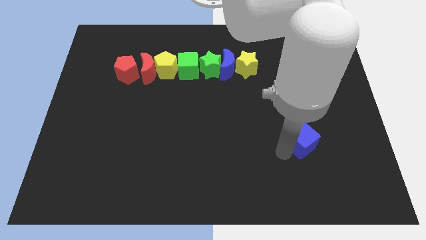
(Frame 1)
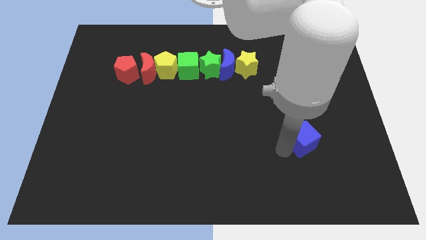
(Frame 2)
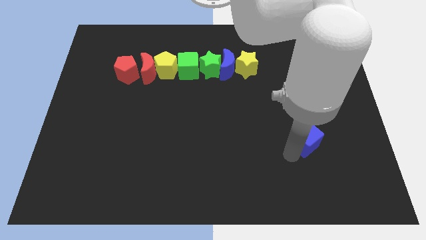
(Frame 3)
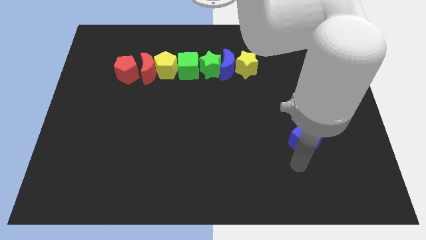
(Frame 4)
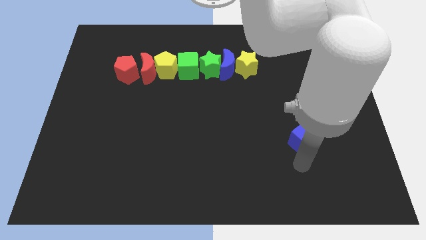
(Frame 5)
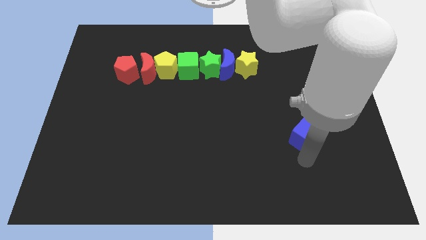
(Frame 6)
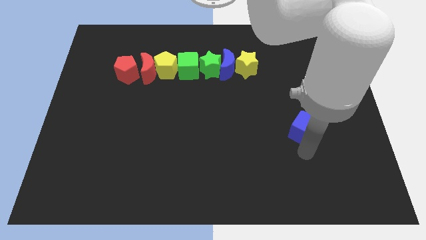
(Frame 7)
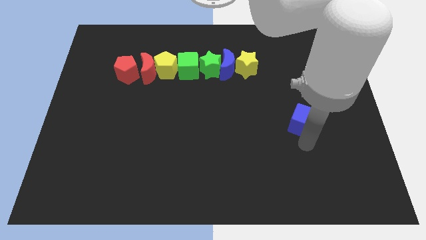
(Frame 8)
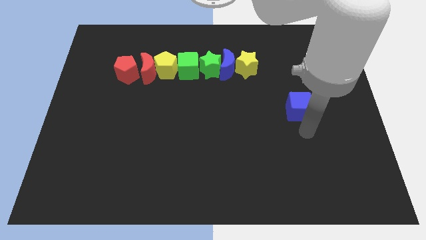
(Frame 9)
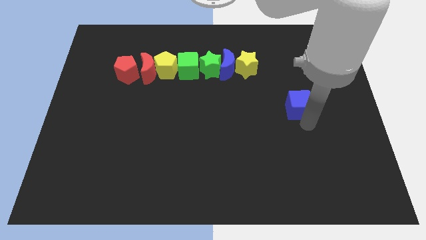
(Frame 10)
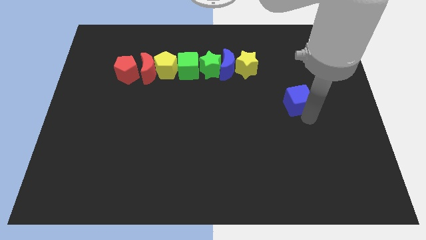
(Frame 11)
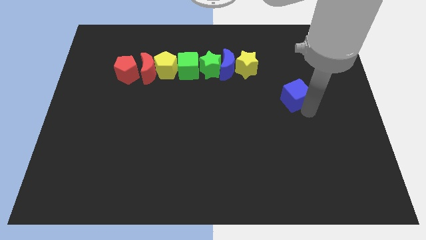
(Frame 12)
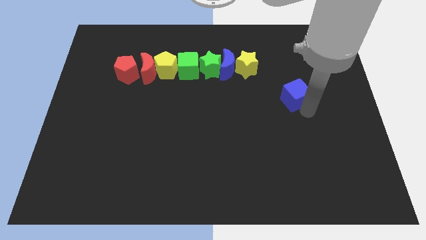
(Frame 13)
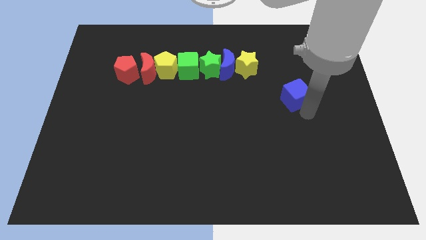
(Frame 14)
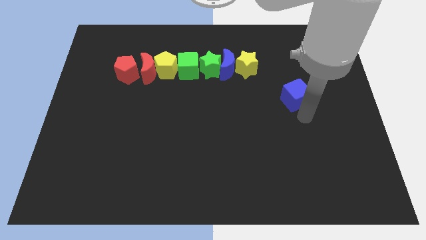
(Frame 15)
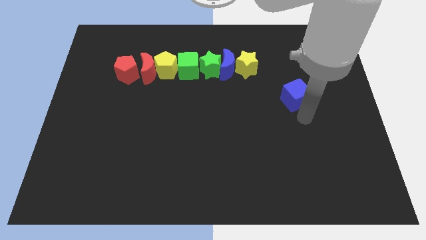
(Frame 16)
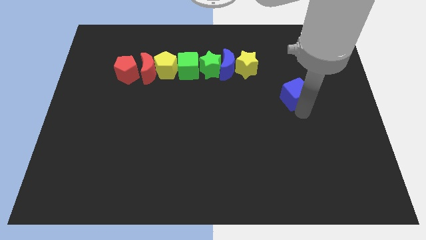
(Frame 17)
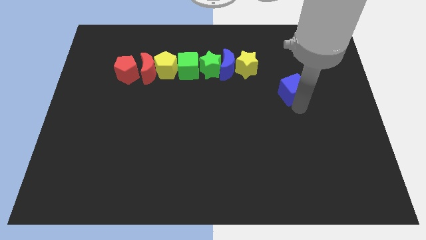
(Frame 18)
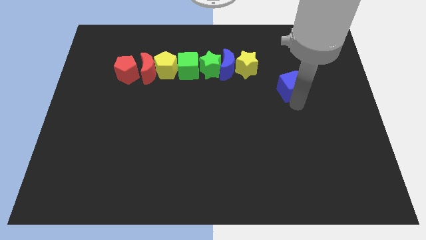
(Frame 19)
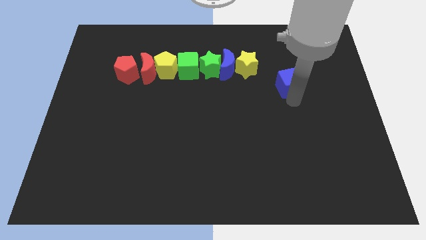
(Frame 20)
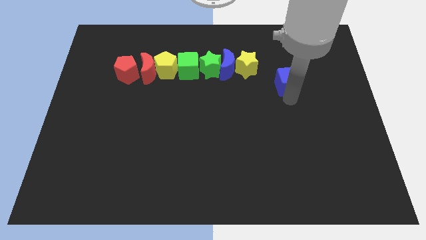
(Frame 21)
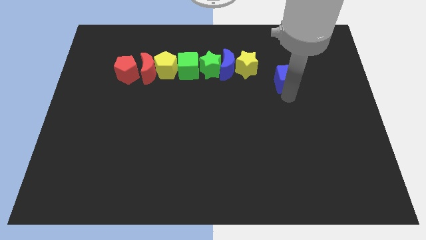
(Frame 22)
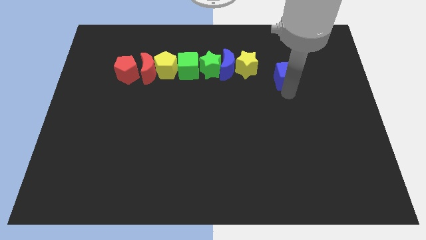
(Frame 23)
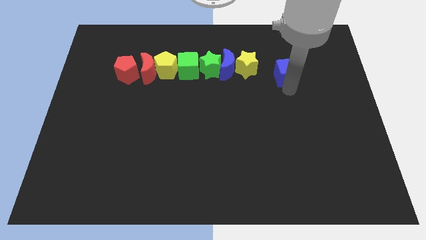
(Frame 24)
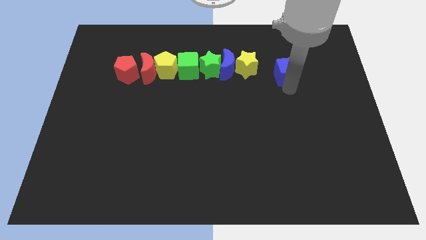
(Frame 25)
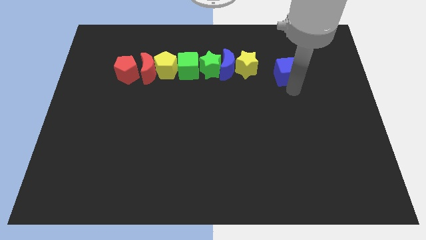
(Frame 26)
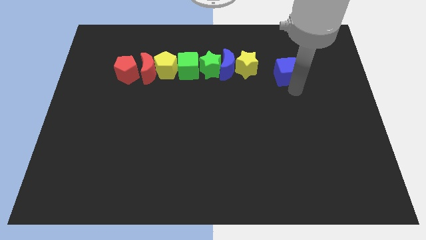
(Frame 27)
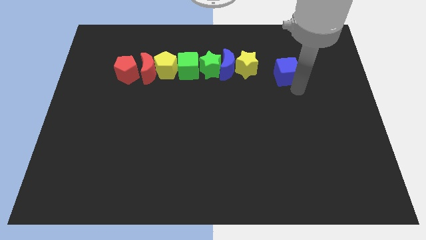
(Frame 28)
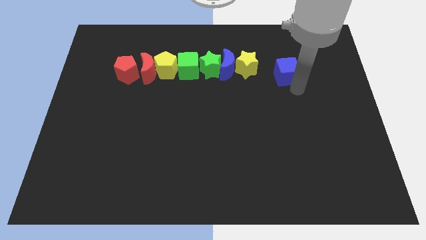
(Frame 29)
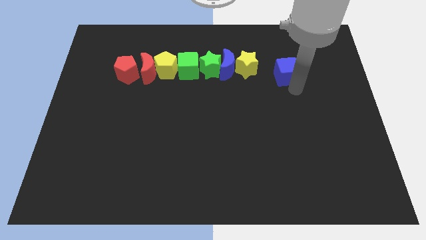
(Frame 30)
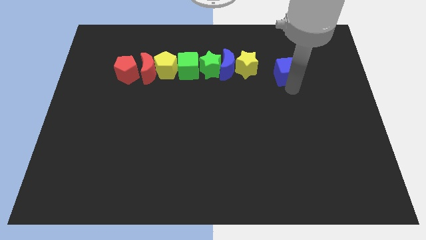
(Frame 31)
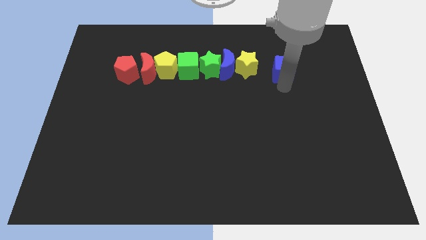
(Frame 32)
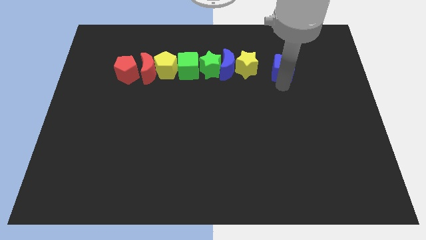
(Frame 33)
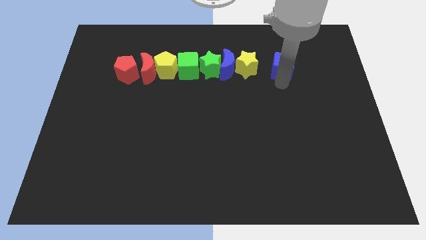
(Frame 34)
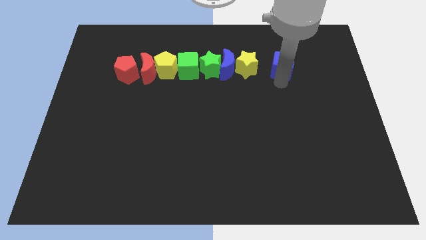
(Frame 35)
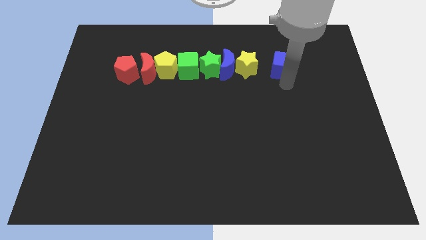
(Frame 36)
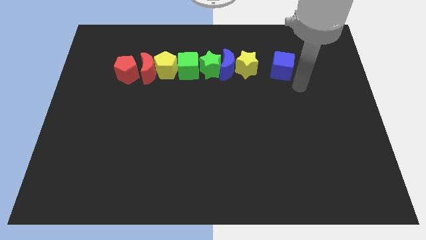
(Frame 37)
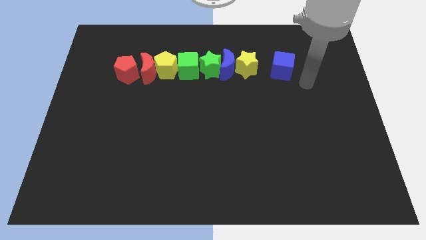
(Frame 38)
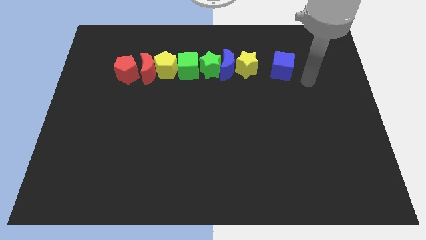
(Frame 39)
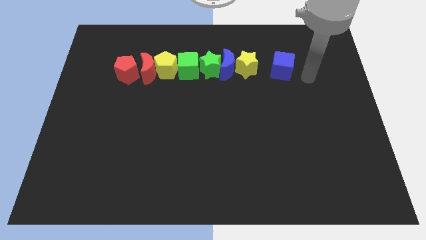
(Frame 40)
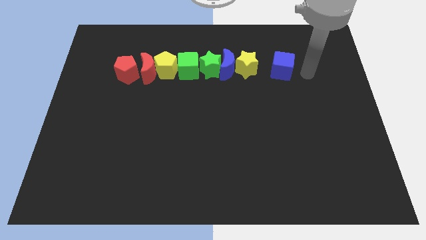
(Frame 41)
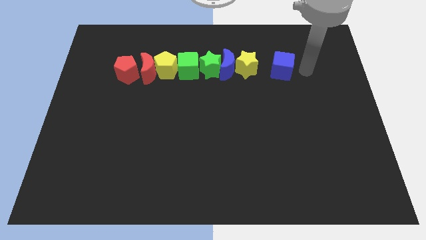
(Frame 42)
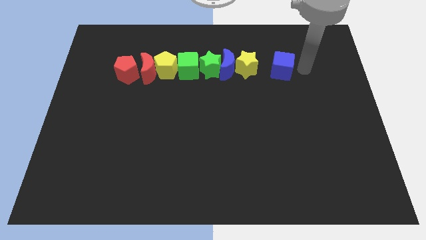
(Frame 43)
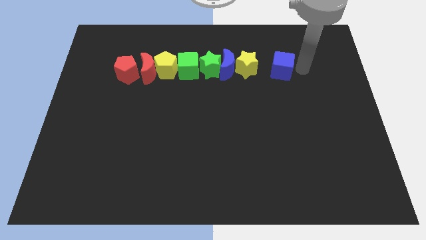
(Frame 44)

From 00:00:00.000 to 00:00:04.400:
push the blue cube to the right side of the yellow star

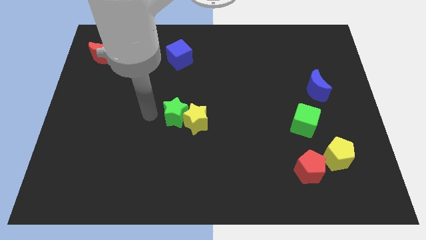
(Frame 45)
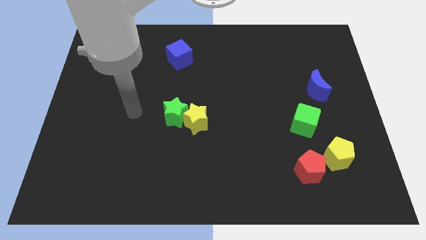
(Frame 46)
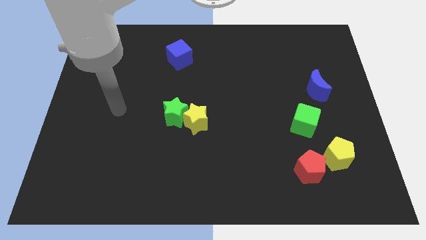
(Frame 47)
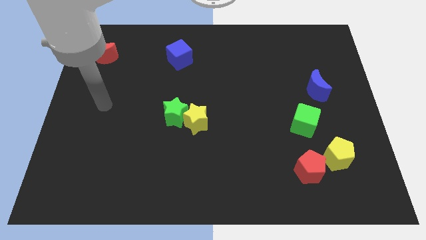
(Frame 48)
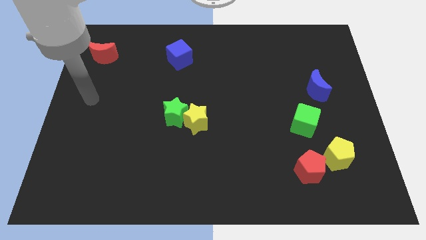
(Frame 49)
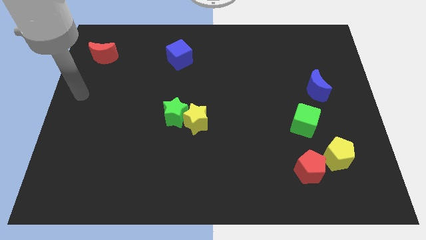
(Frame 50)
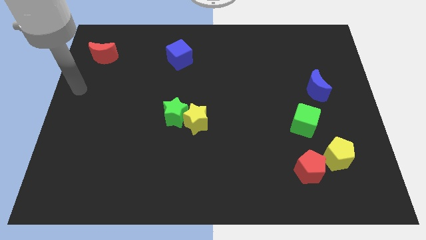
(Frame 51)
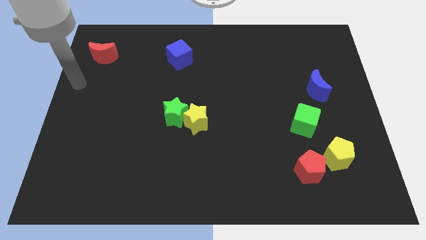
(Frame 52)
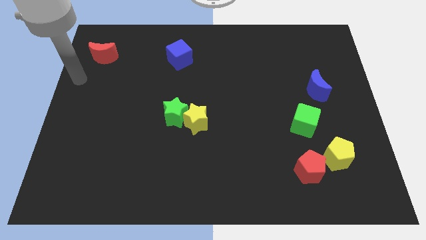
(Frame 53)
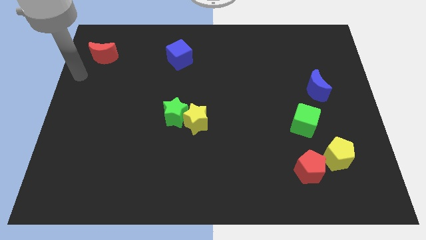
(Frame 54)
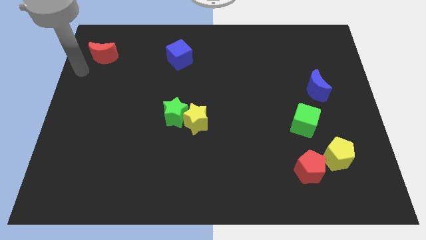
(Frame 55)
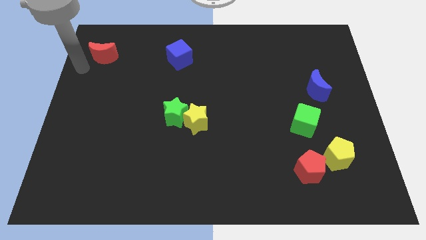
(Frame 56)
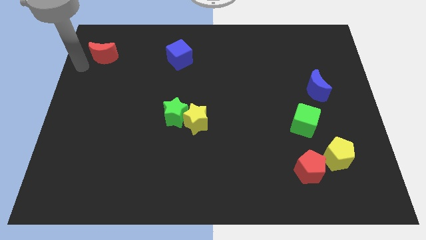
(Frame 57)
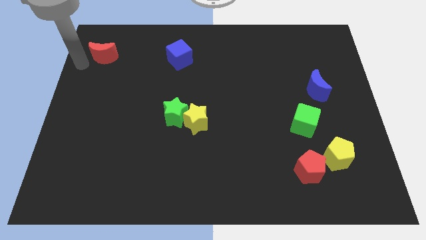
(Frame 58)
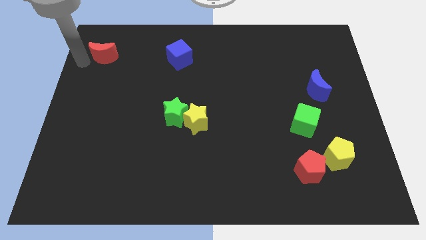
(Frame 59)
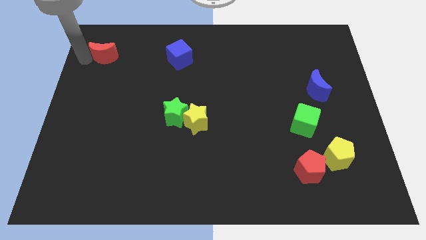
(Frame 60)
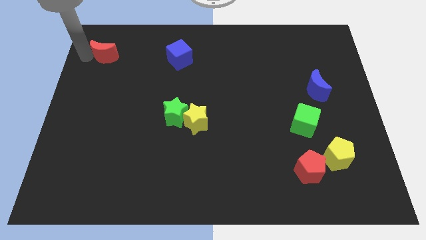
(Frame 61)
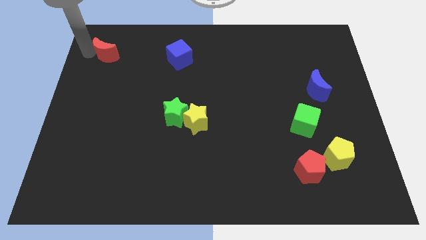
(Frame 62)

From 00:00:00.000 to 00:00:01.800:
tap the left side of the red crescent

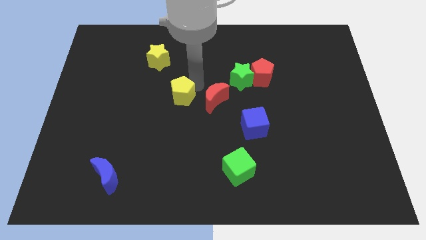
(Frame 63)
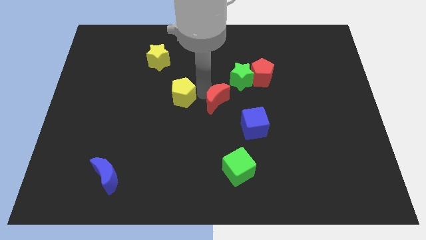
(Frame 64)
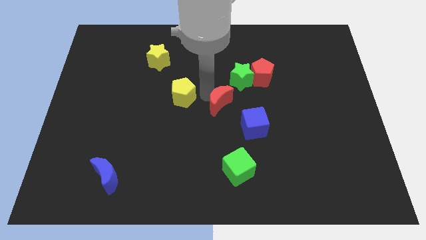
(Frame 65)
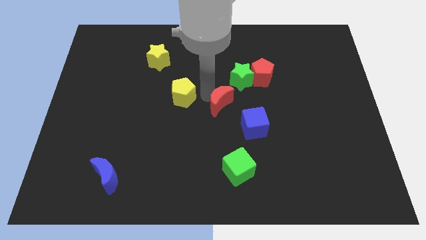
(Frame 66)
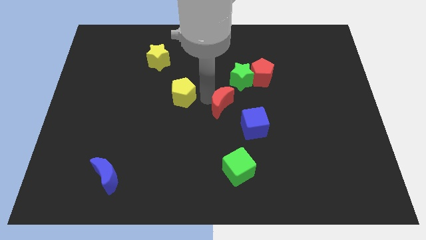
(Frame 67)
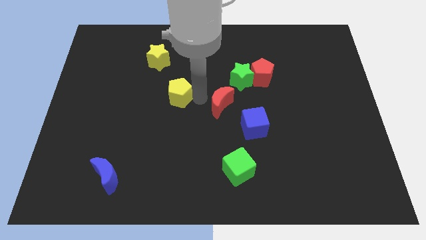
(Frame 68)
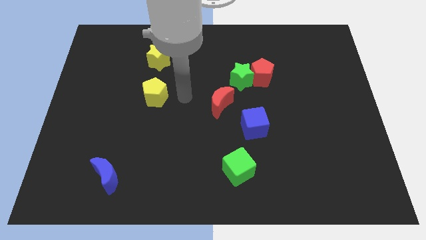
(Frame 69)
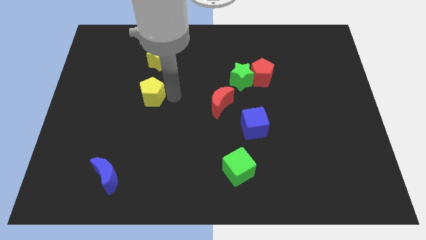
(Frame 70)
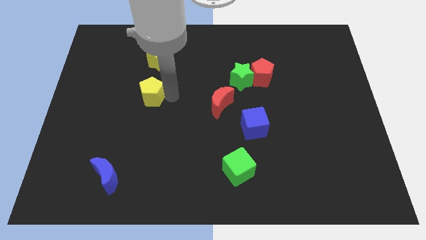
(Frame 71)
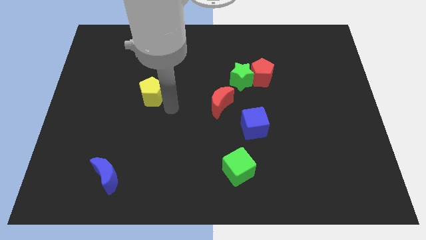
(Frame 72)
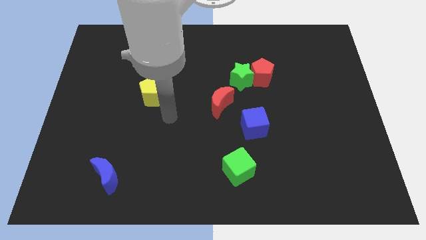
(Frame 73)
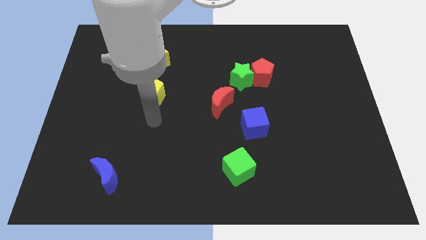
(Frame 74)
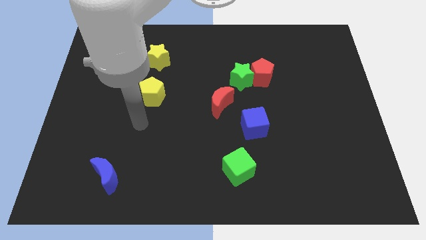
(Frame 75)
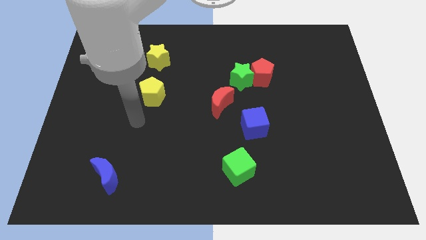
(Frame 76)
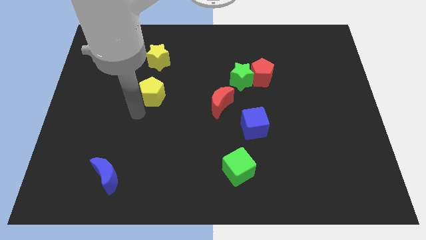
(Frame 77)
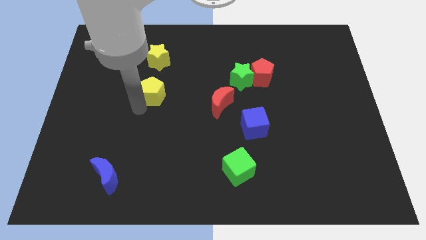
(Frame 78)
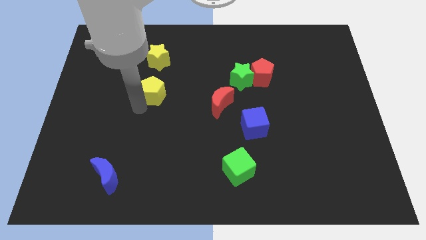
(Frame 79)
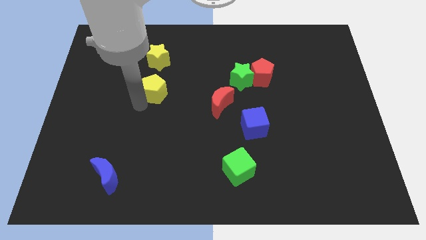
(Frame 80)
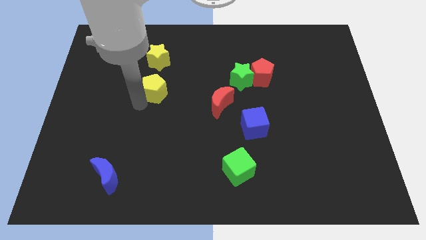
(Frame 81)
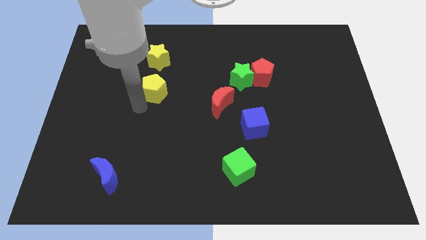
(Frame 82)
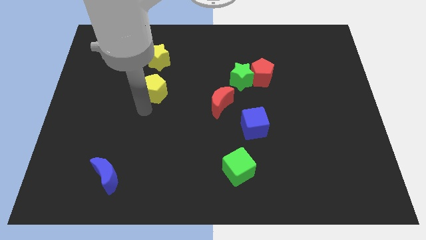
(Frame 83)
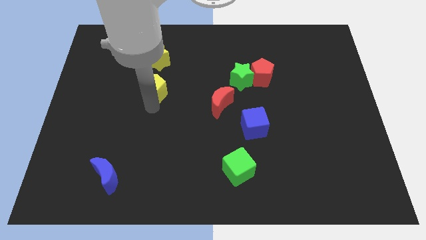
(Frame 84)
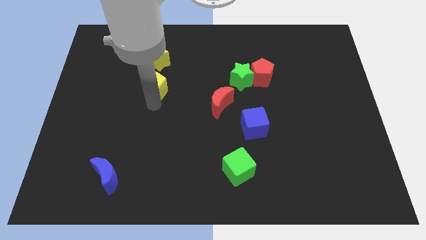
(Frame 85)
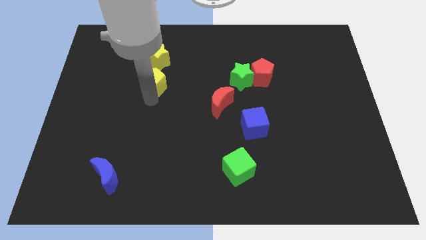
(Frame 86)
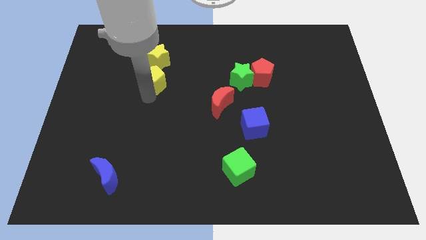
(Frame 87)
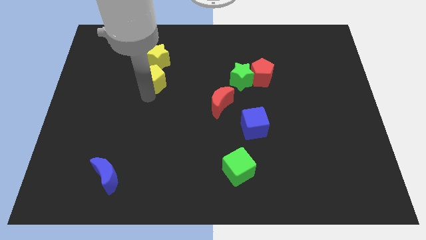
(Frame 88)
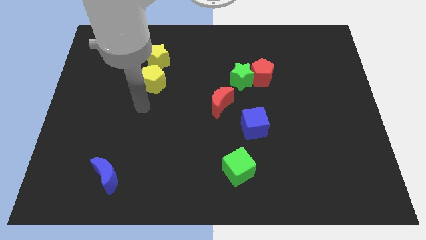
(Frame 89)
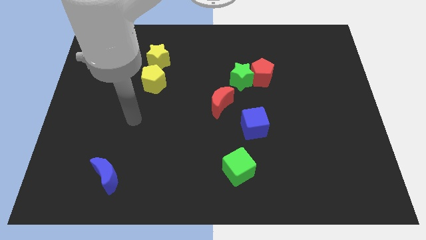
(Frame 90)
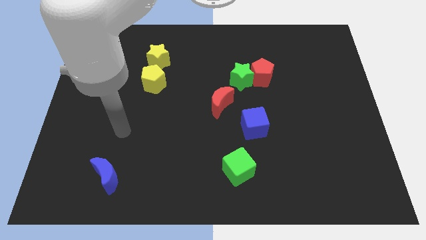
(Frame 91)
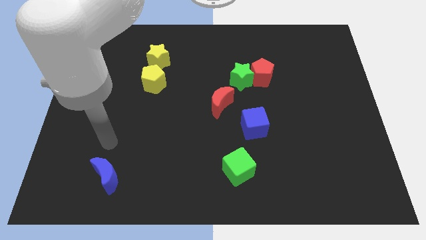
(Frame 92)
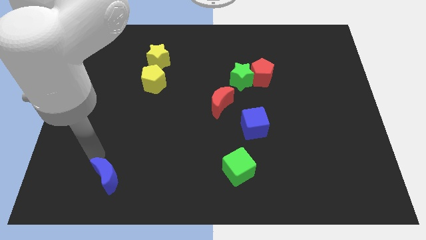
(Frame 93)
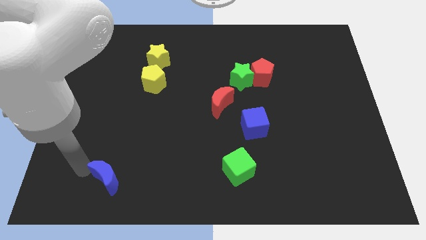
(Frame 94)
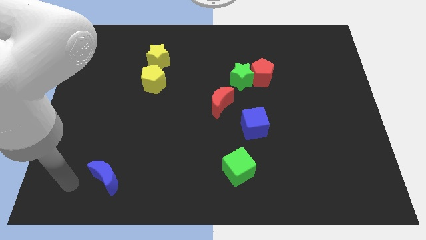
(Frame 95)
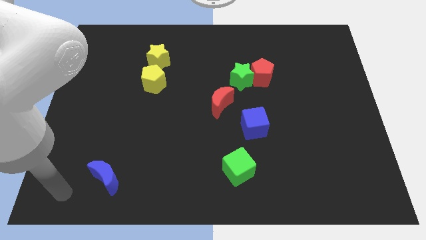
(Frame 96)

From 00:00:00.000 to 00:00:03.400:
move yellow pentagon into yellow star
